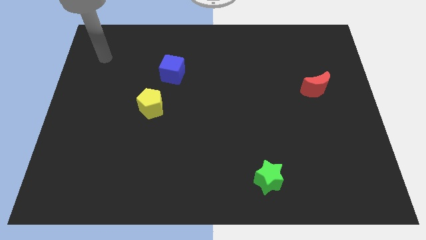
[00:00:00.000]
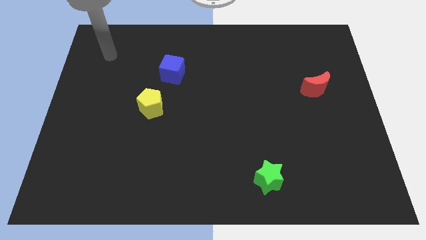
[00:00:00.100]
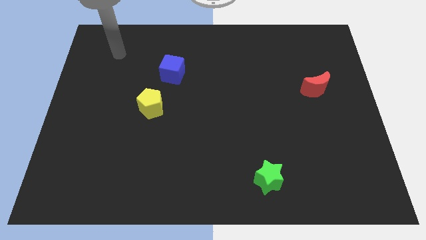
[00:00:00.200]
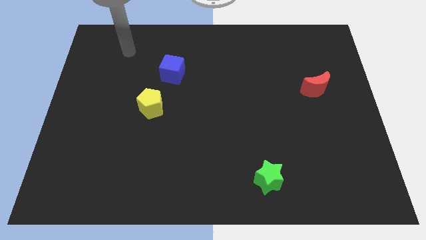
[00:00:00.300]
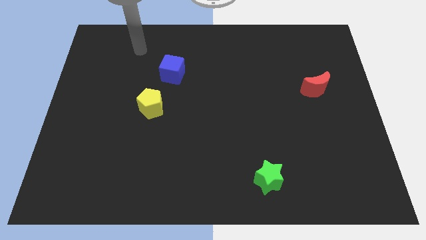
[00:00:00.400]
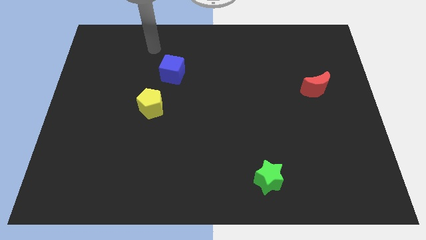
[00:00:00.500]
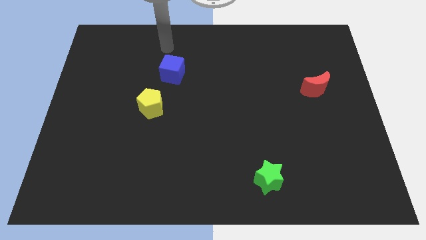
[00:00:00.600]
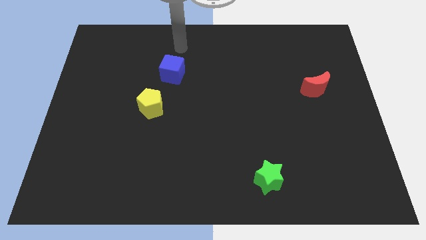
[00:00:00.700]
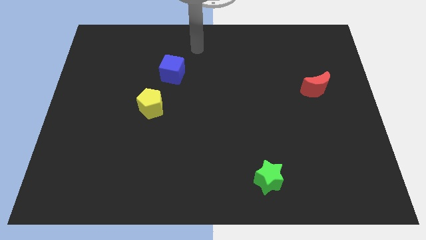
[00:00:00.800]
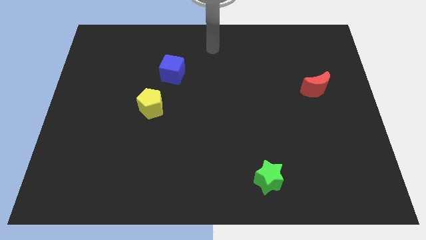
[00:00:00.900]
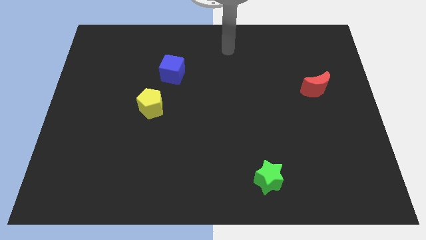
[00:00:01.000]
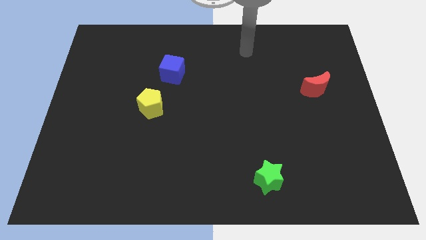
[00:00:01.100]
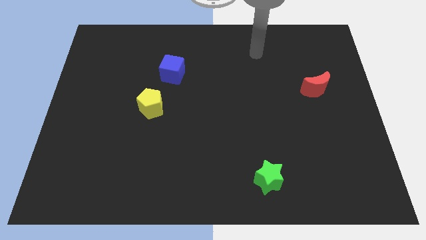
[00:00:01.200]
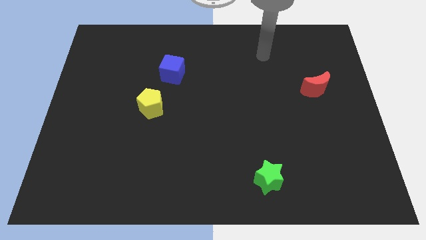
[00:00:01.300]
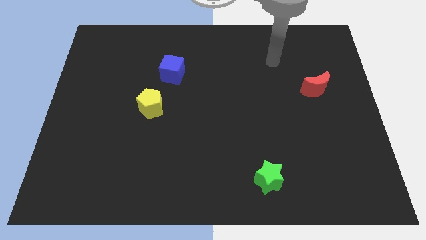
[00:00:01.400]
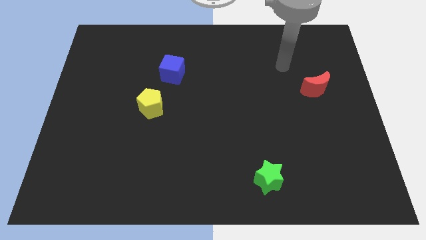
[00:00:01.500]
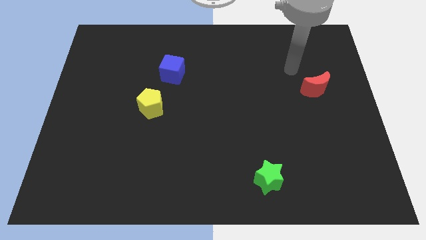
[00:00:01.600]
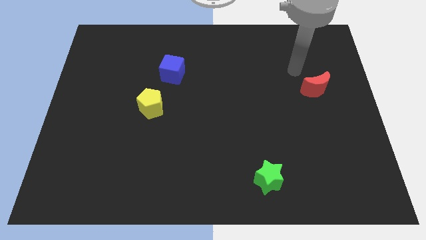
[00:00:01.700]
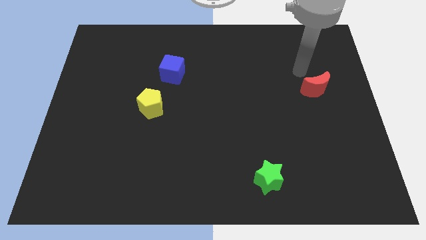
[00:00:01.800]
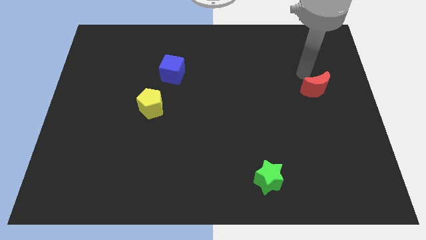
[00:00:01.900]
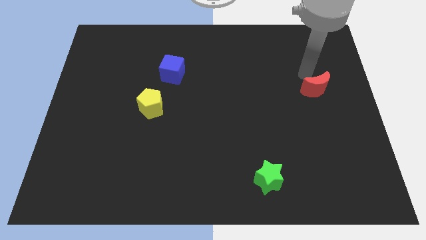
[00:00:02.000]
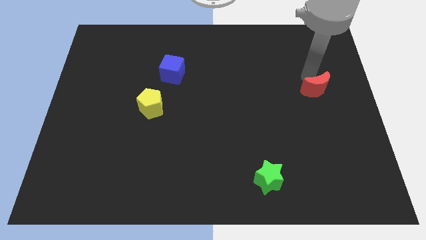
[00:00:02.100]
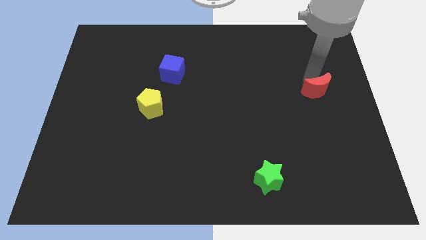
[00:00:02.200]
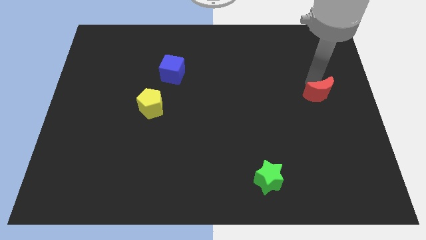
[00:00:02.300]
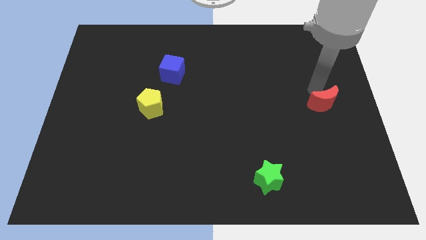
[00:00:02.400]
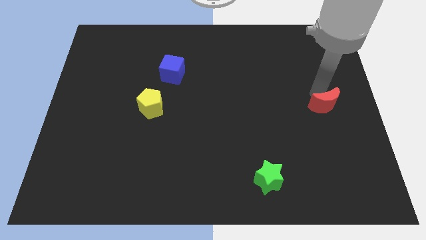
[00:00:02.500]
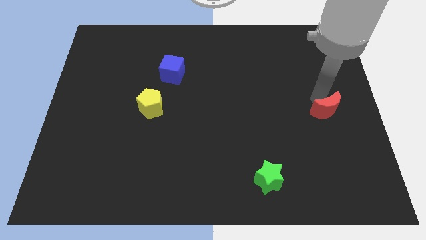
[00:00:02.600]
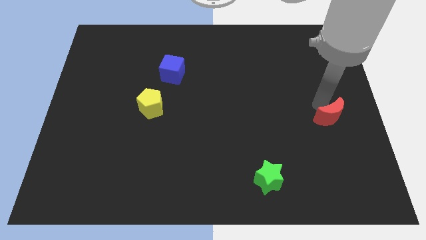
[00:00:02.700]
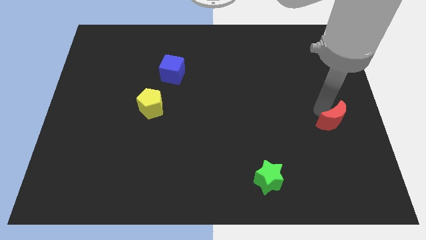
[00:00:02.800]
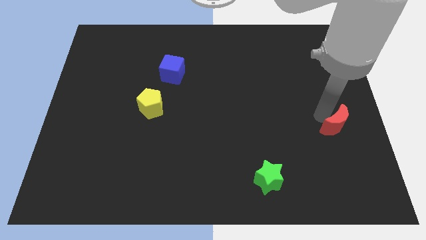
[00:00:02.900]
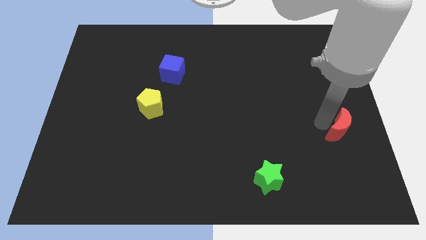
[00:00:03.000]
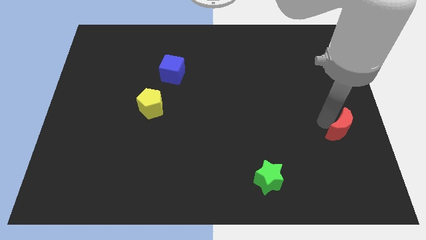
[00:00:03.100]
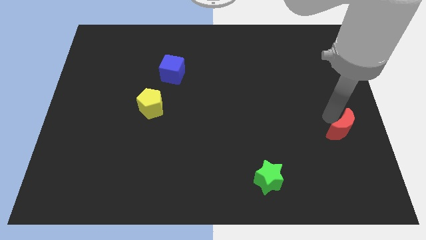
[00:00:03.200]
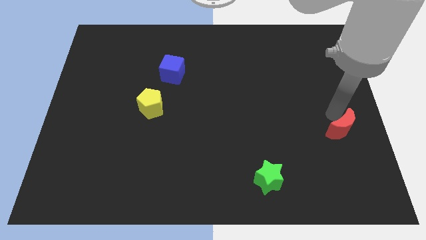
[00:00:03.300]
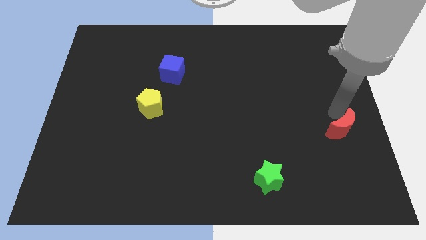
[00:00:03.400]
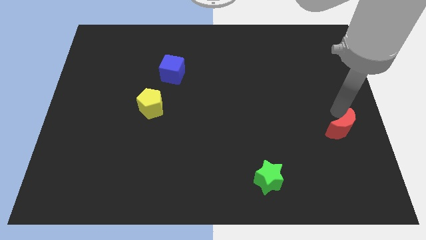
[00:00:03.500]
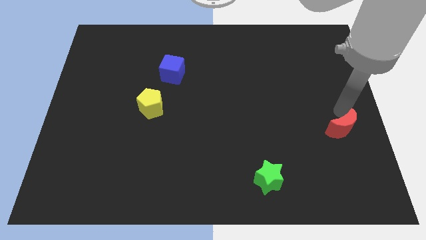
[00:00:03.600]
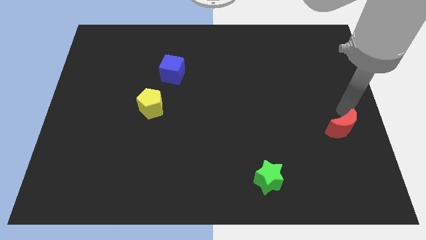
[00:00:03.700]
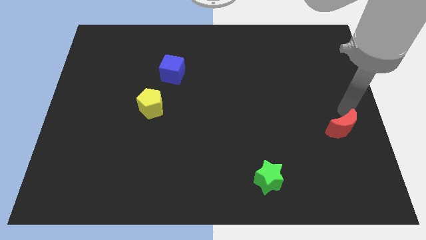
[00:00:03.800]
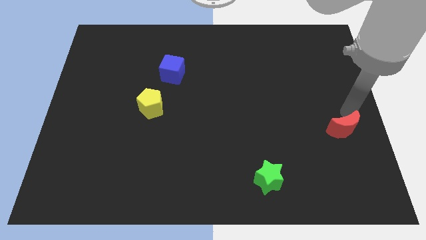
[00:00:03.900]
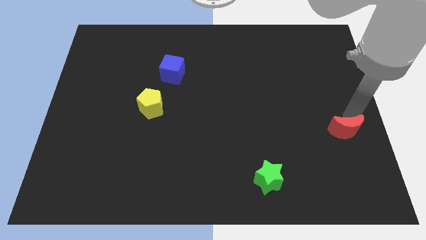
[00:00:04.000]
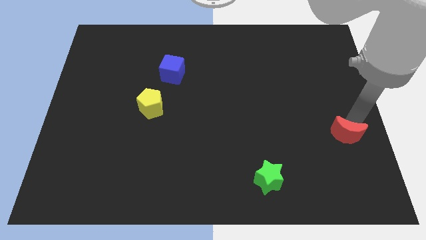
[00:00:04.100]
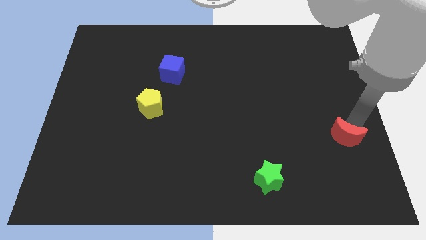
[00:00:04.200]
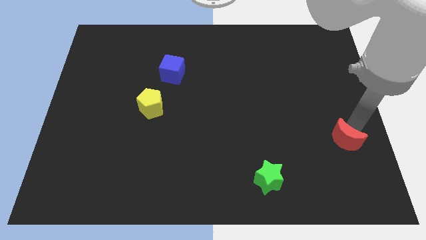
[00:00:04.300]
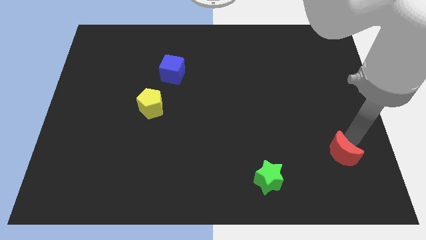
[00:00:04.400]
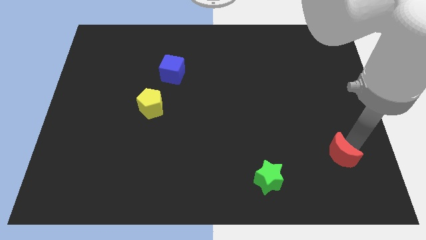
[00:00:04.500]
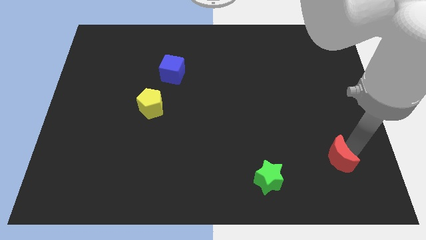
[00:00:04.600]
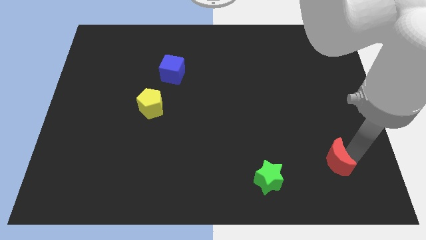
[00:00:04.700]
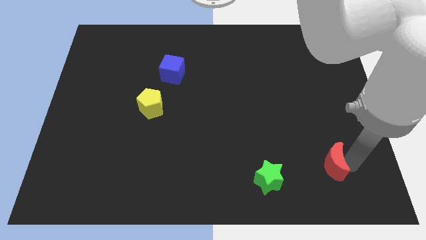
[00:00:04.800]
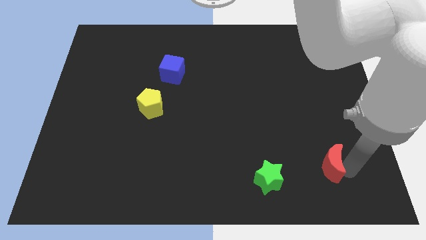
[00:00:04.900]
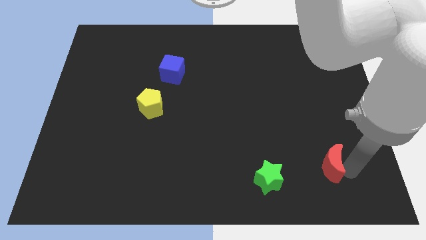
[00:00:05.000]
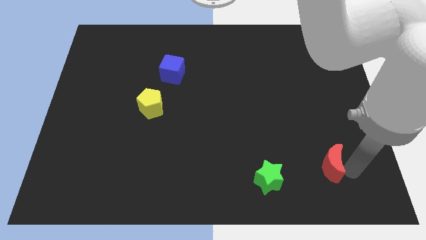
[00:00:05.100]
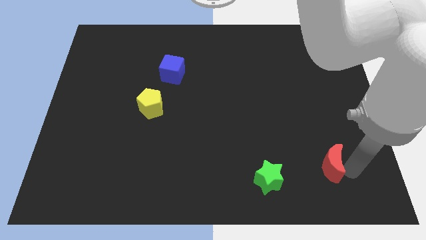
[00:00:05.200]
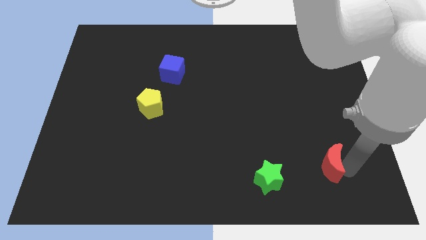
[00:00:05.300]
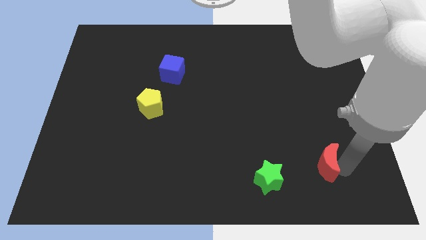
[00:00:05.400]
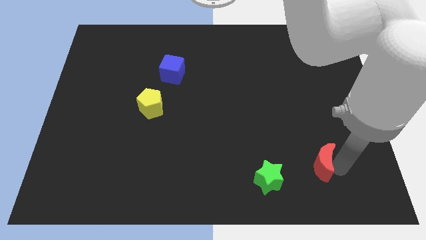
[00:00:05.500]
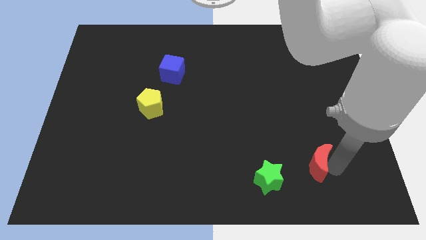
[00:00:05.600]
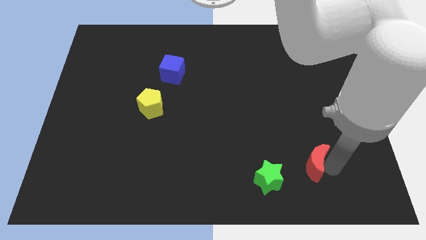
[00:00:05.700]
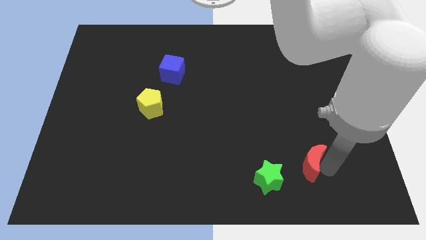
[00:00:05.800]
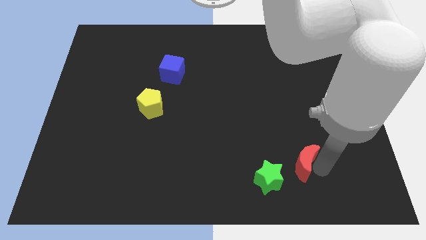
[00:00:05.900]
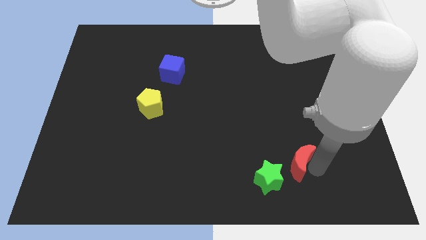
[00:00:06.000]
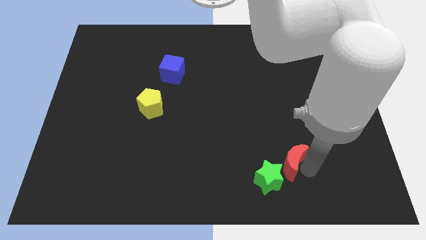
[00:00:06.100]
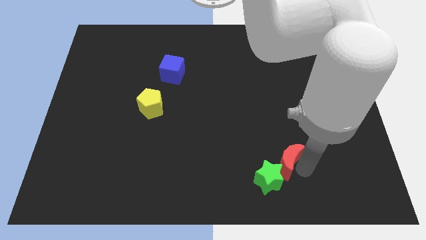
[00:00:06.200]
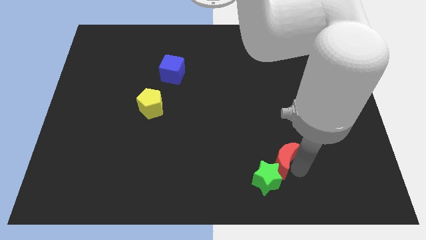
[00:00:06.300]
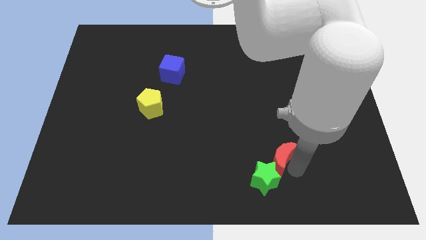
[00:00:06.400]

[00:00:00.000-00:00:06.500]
push the moon to the green block

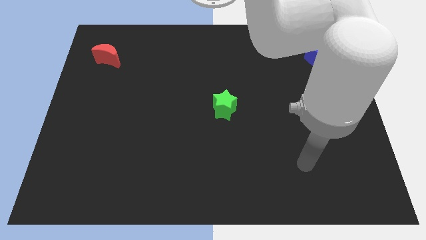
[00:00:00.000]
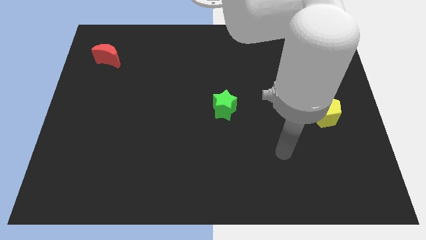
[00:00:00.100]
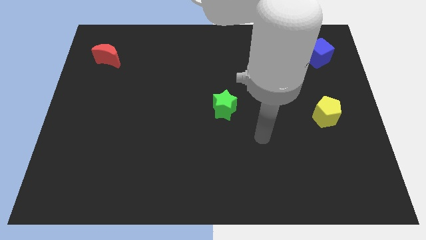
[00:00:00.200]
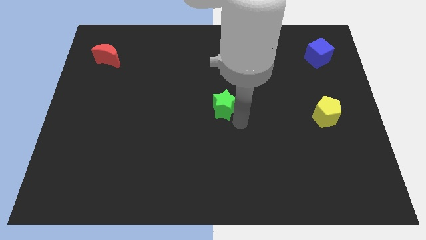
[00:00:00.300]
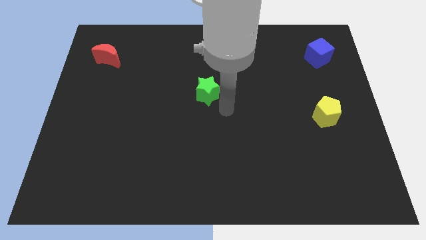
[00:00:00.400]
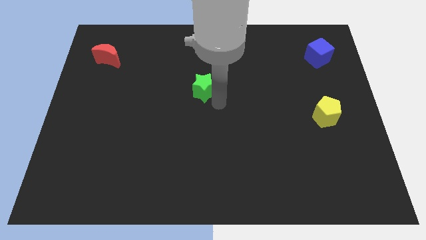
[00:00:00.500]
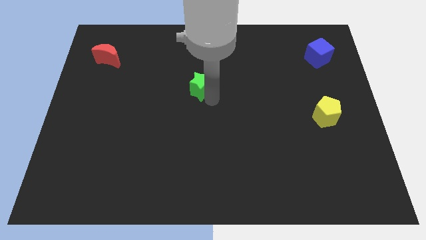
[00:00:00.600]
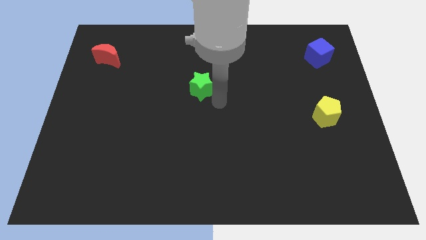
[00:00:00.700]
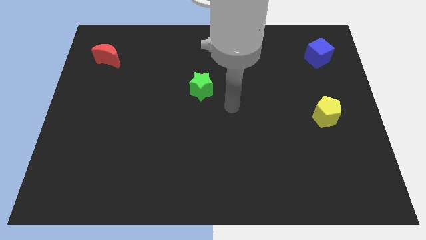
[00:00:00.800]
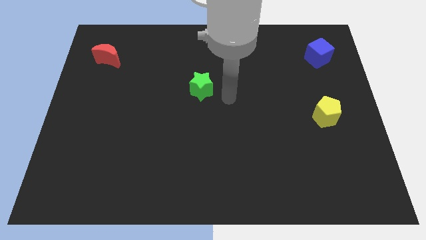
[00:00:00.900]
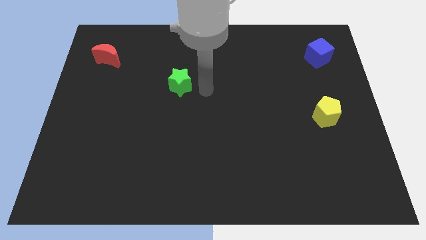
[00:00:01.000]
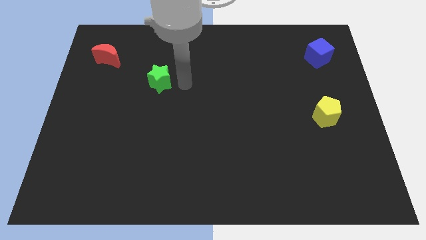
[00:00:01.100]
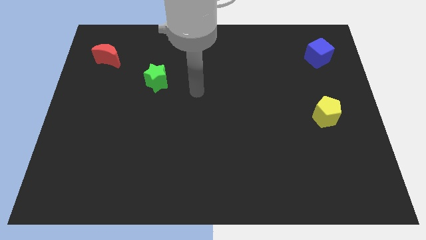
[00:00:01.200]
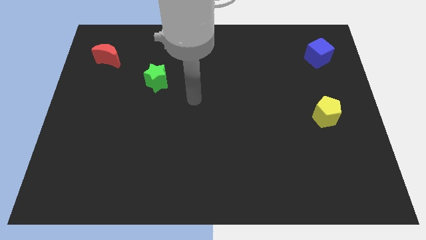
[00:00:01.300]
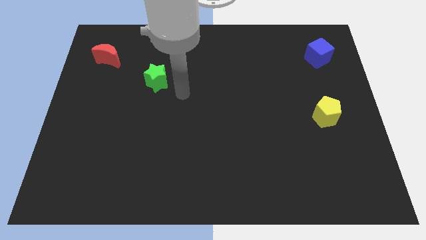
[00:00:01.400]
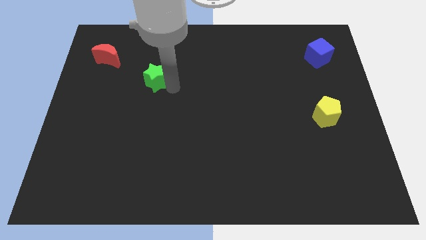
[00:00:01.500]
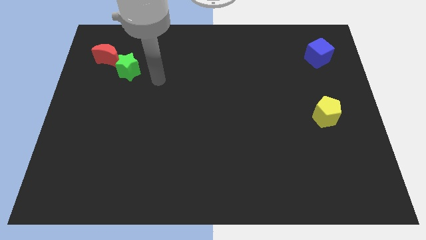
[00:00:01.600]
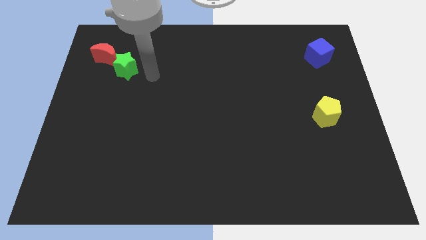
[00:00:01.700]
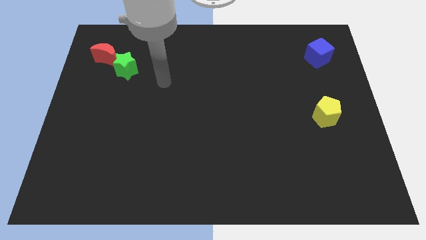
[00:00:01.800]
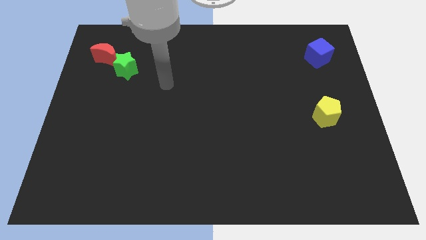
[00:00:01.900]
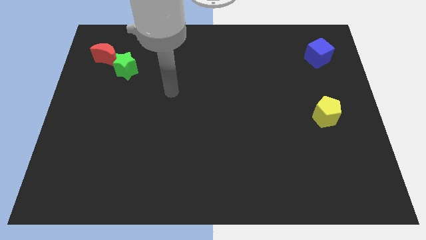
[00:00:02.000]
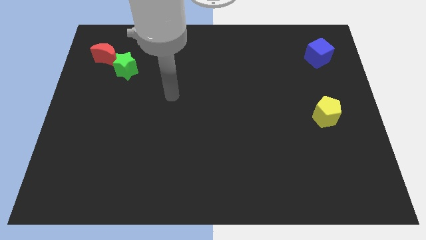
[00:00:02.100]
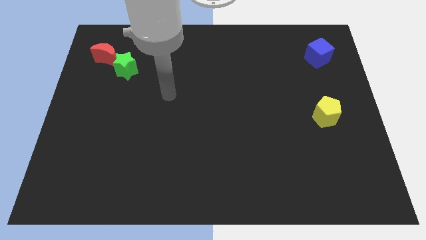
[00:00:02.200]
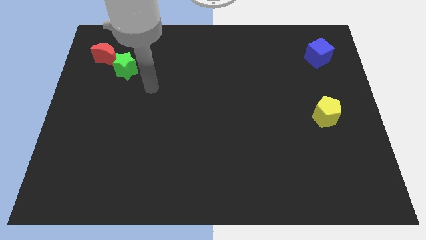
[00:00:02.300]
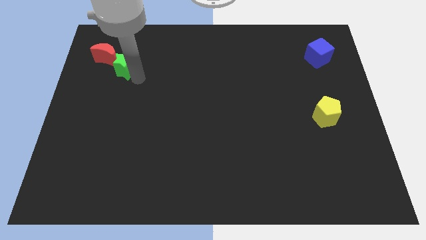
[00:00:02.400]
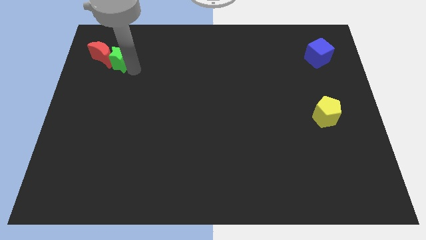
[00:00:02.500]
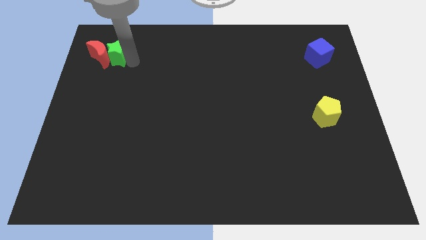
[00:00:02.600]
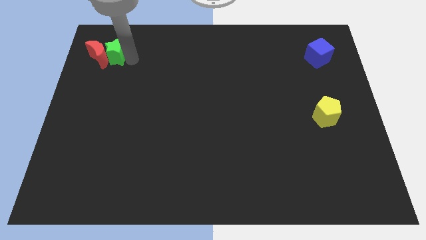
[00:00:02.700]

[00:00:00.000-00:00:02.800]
slide the star close to the red moon
